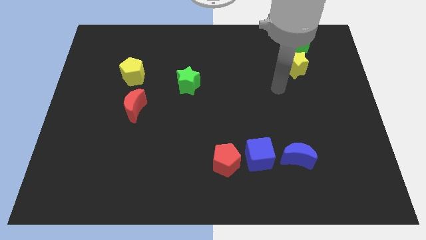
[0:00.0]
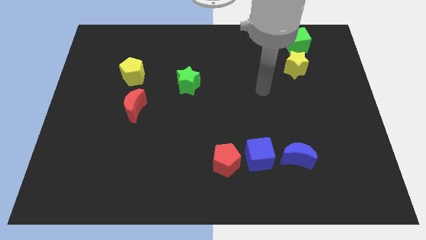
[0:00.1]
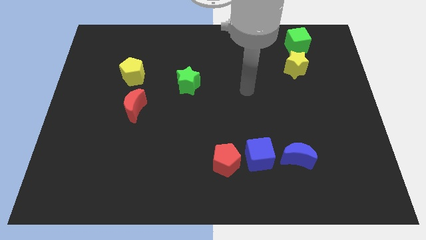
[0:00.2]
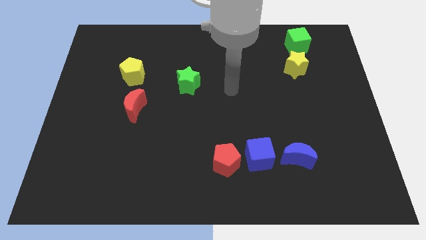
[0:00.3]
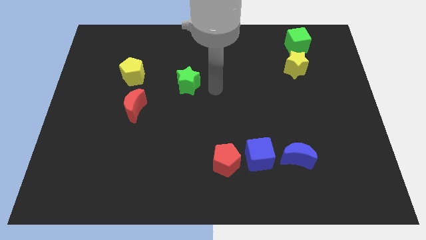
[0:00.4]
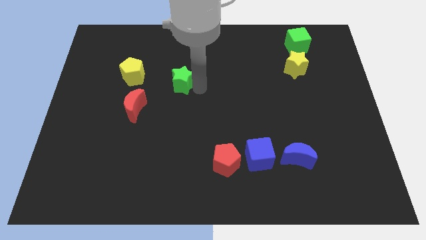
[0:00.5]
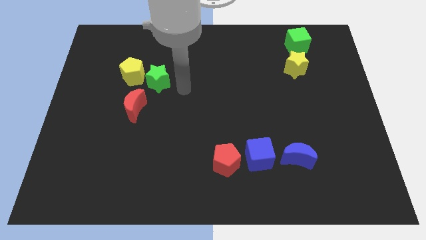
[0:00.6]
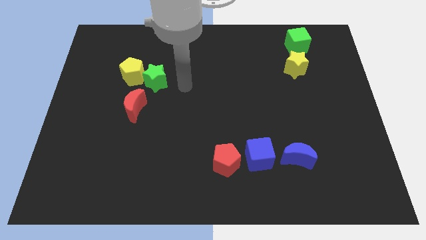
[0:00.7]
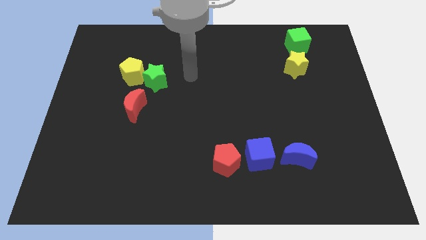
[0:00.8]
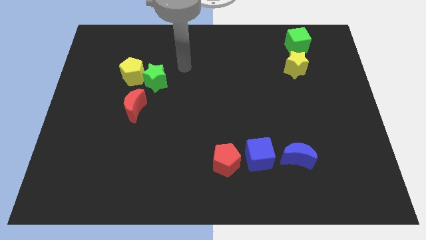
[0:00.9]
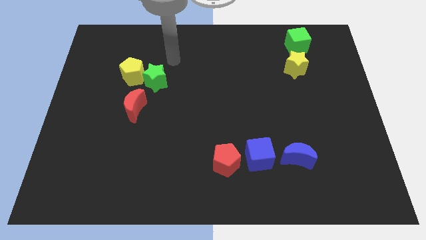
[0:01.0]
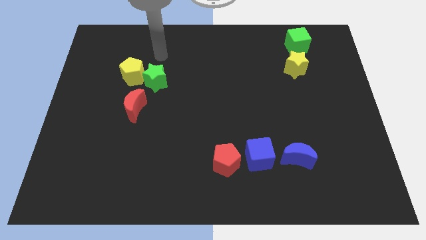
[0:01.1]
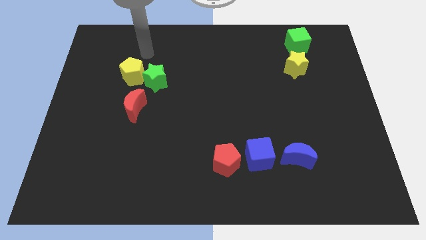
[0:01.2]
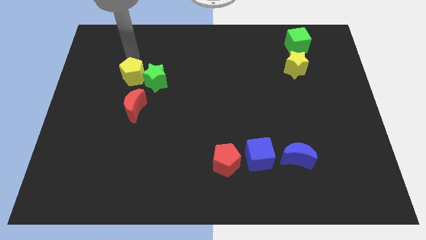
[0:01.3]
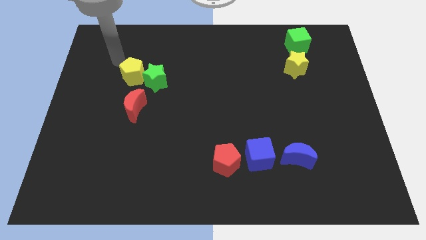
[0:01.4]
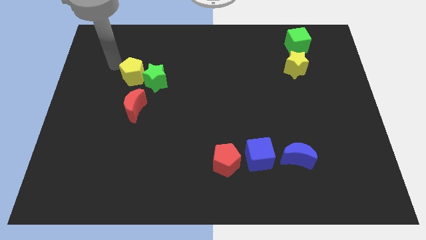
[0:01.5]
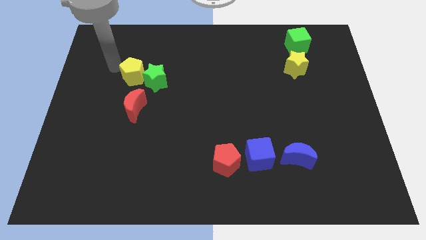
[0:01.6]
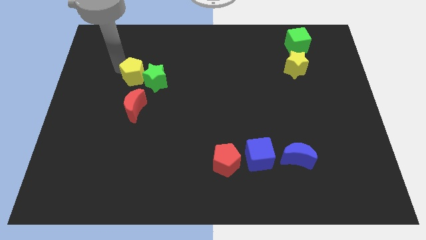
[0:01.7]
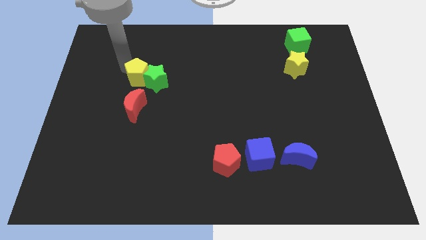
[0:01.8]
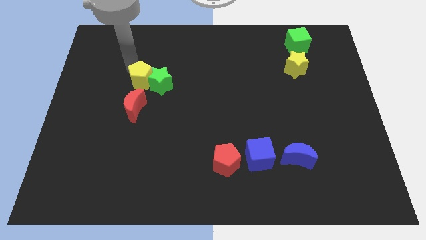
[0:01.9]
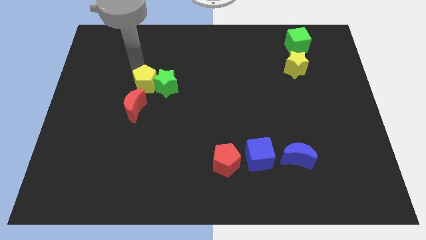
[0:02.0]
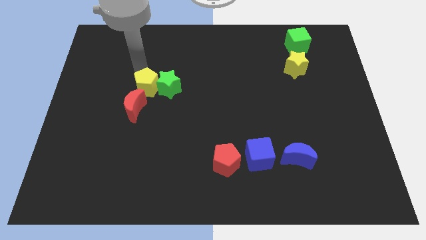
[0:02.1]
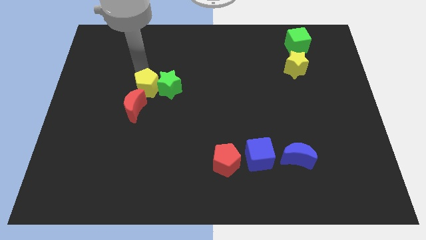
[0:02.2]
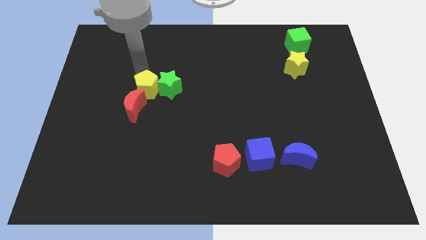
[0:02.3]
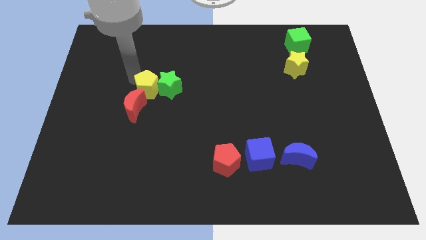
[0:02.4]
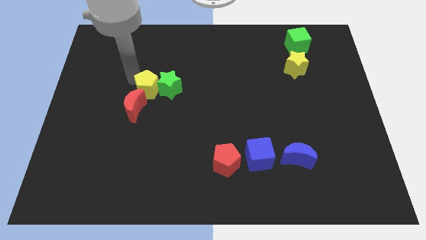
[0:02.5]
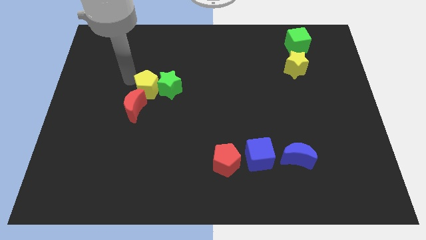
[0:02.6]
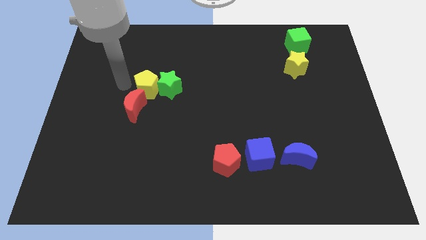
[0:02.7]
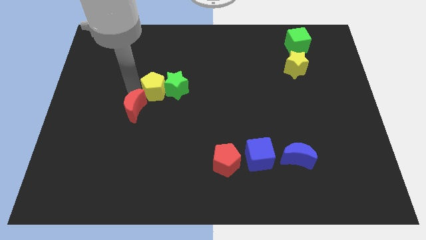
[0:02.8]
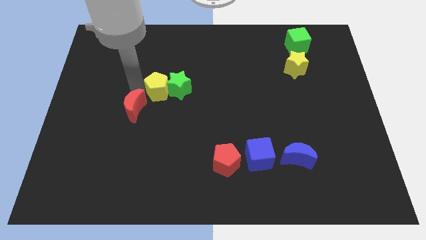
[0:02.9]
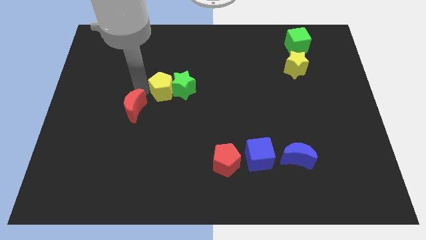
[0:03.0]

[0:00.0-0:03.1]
push the yellow pentagon and green star to the center

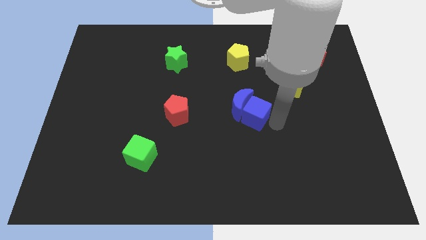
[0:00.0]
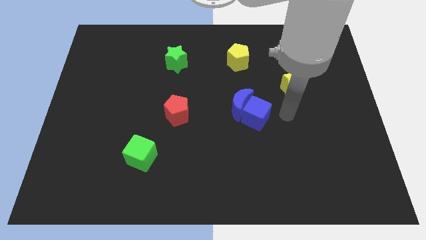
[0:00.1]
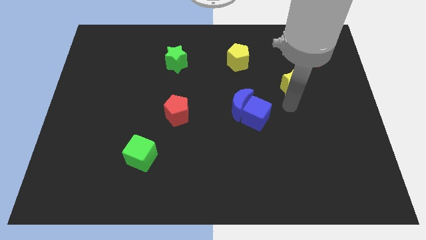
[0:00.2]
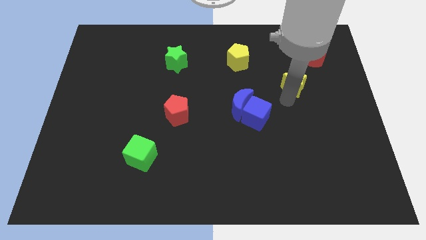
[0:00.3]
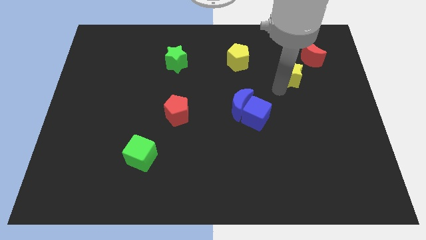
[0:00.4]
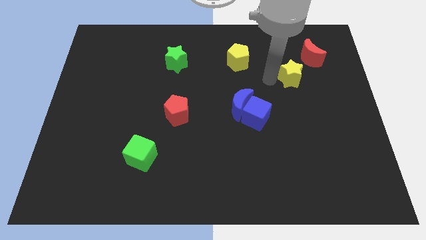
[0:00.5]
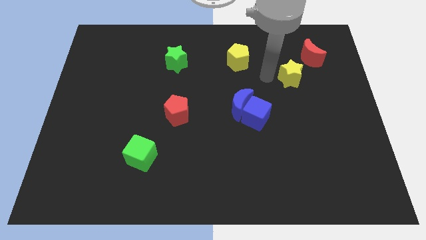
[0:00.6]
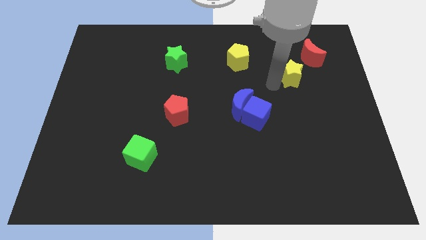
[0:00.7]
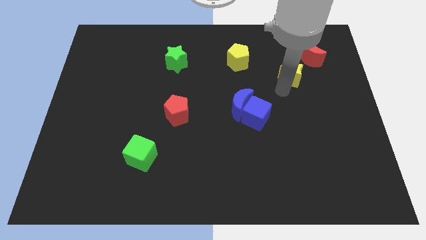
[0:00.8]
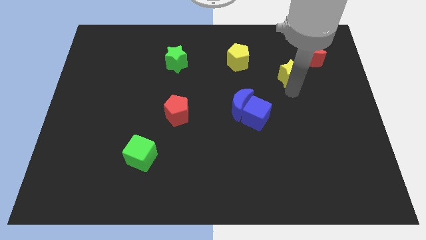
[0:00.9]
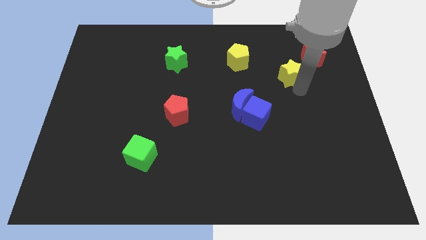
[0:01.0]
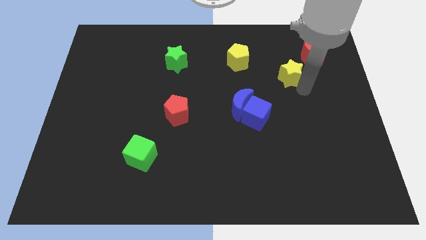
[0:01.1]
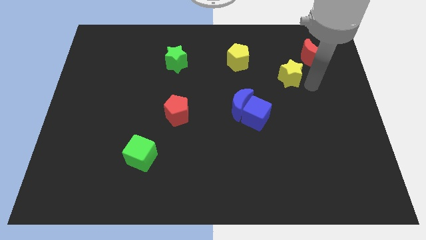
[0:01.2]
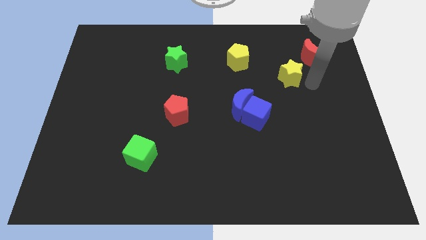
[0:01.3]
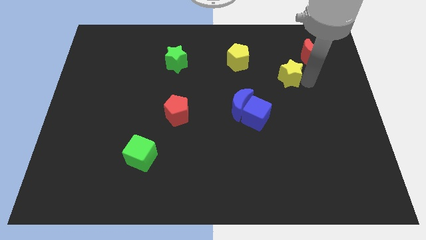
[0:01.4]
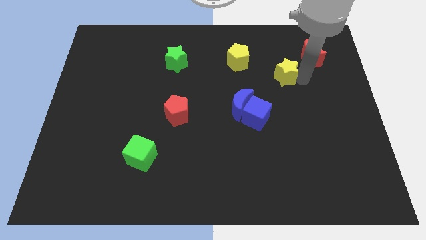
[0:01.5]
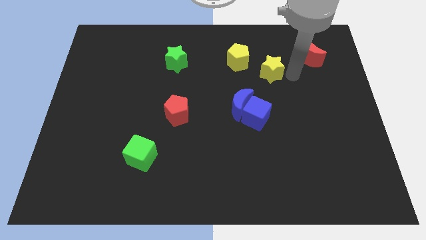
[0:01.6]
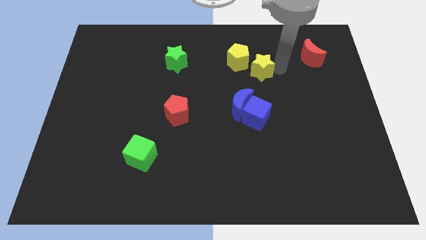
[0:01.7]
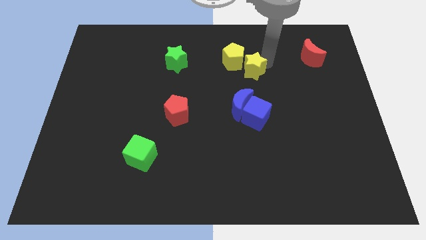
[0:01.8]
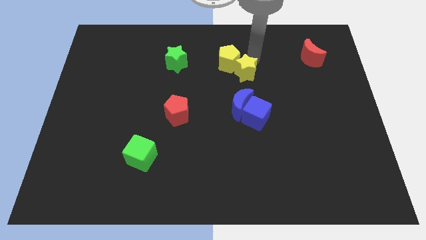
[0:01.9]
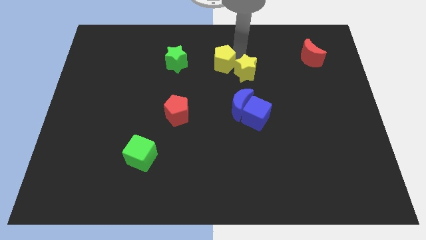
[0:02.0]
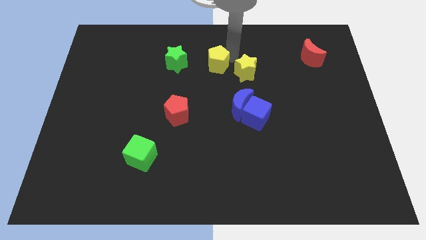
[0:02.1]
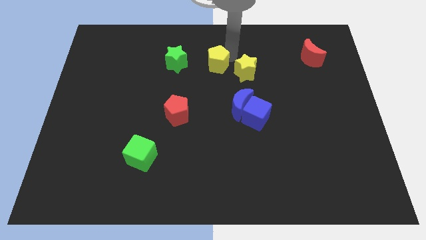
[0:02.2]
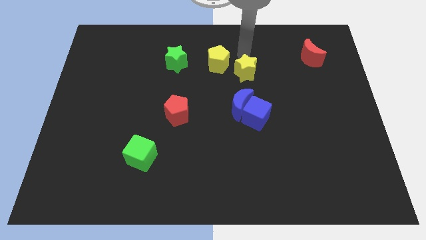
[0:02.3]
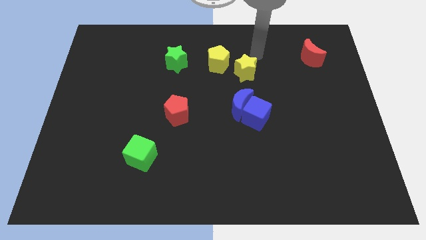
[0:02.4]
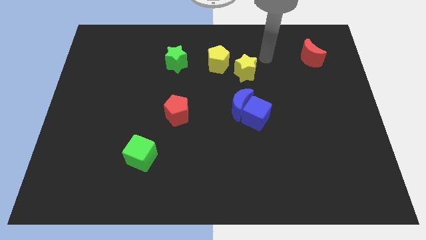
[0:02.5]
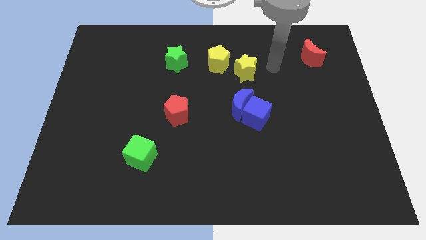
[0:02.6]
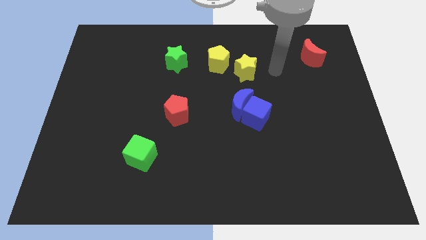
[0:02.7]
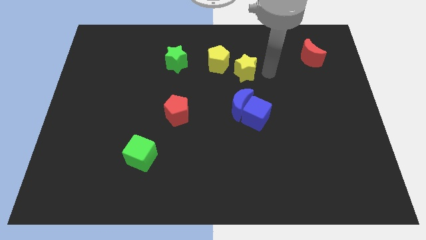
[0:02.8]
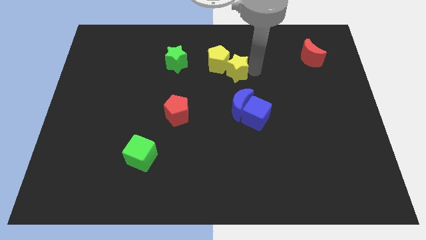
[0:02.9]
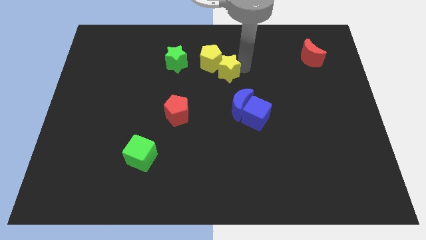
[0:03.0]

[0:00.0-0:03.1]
push the yellow star into the yellow pentagon

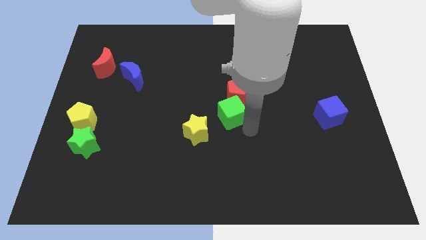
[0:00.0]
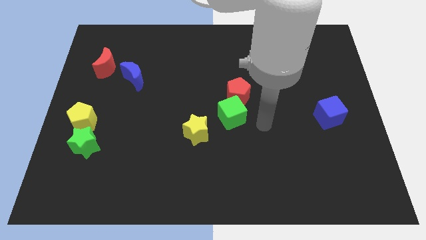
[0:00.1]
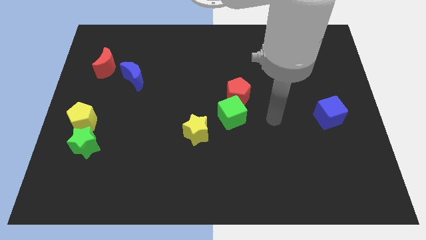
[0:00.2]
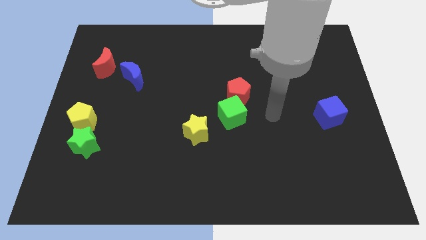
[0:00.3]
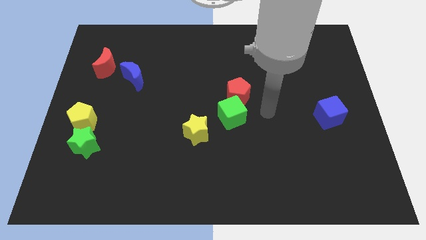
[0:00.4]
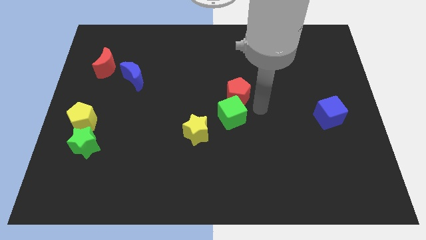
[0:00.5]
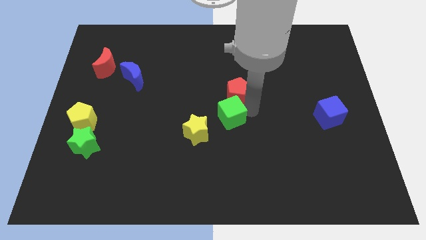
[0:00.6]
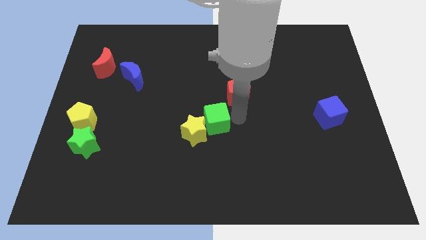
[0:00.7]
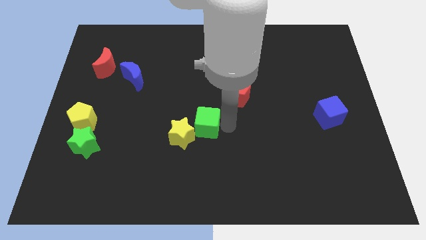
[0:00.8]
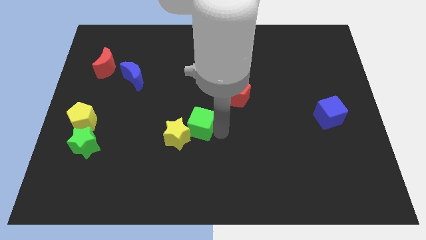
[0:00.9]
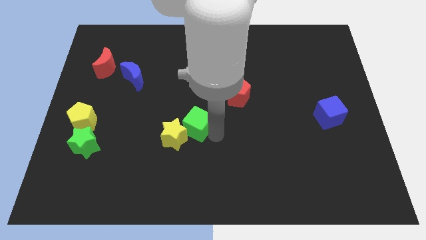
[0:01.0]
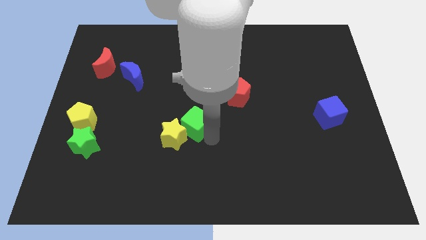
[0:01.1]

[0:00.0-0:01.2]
push the green cube into the yellow star

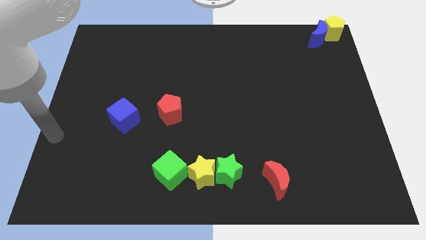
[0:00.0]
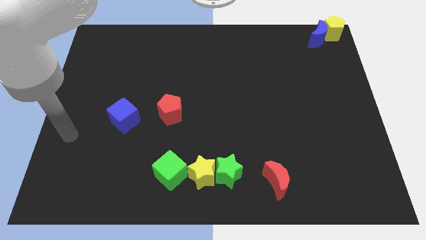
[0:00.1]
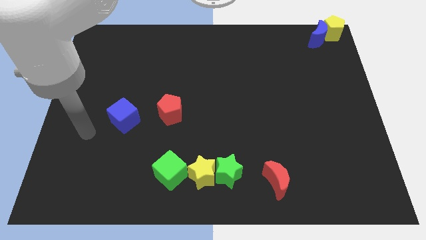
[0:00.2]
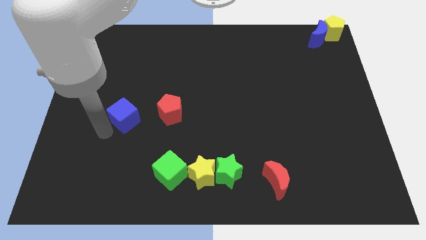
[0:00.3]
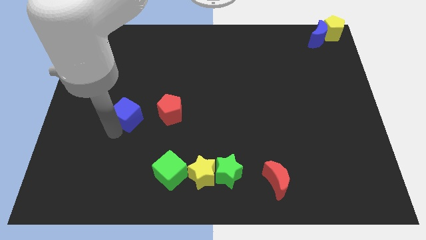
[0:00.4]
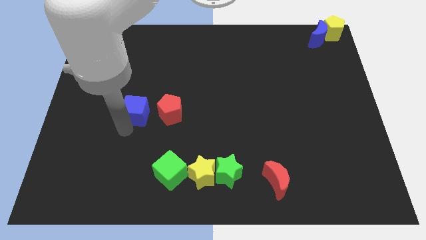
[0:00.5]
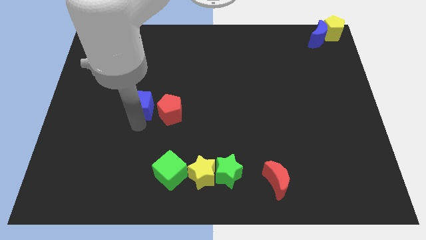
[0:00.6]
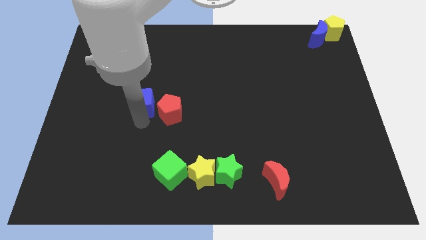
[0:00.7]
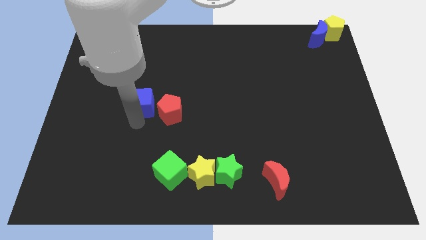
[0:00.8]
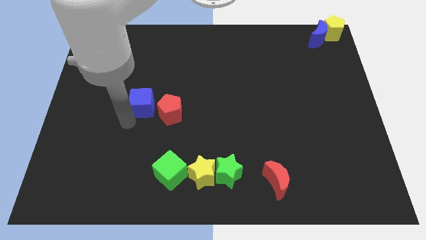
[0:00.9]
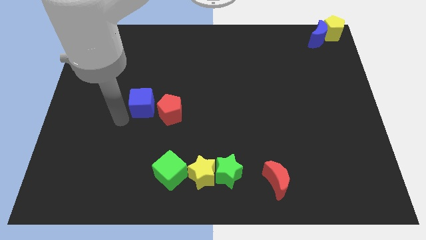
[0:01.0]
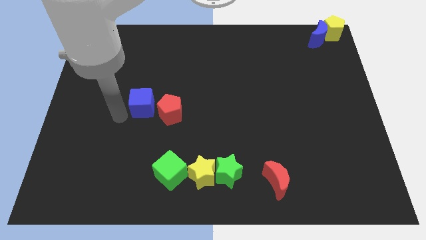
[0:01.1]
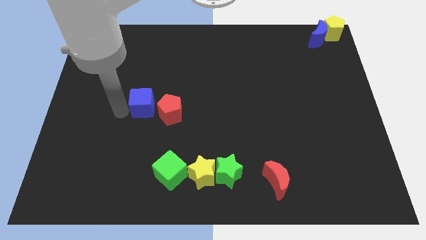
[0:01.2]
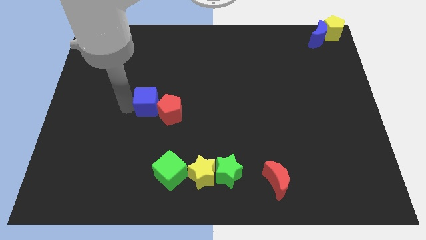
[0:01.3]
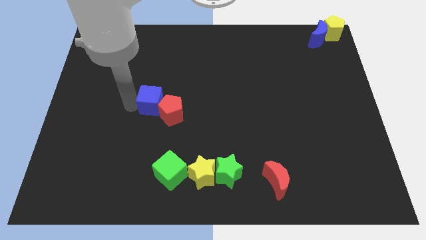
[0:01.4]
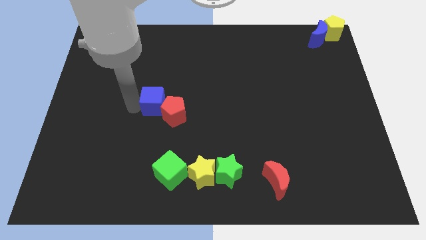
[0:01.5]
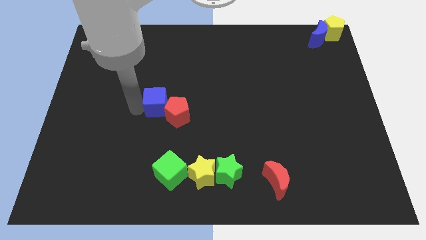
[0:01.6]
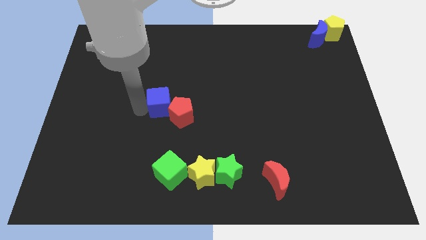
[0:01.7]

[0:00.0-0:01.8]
push the blue cube into the red pentagon
